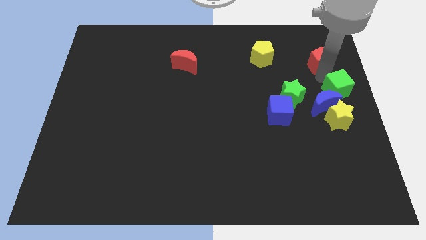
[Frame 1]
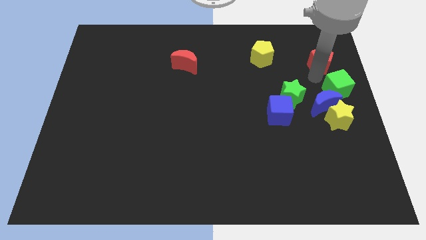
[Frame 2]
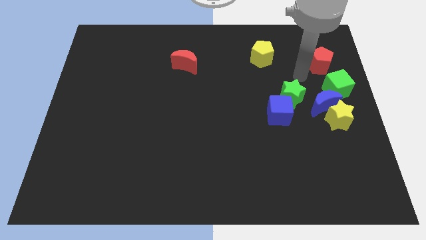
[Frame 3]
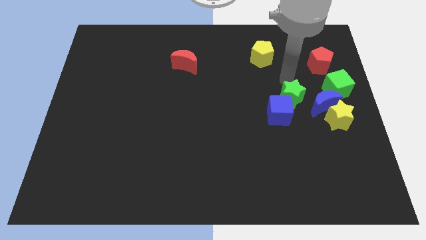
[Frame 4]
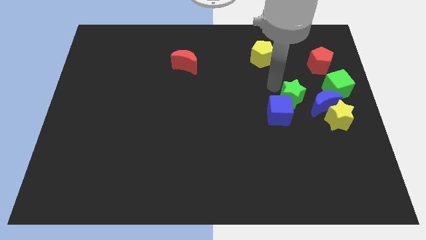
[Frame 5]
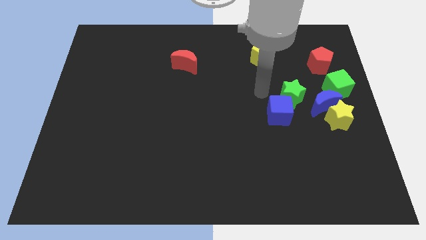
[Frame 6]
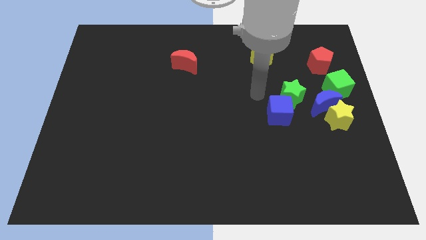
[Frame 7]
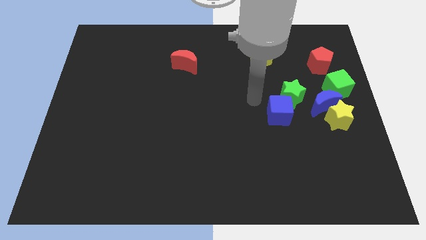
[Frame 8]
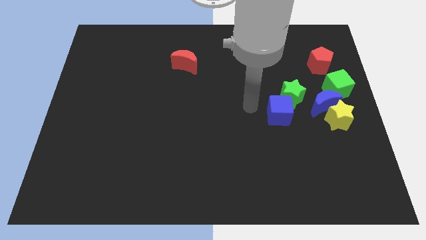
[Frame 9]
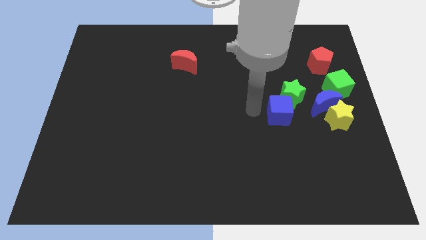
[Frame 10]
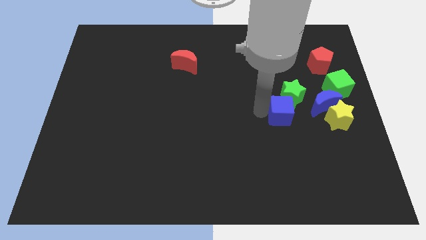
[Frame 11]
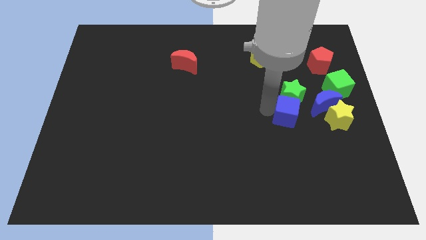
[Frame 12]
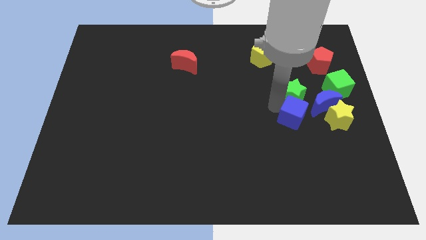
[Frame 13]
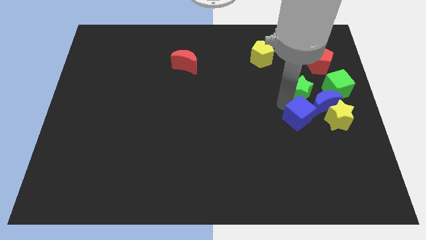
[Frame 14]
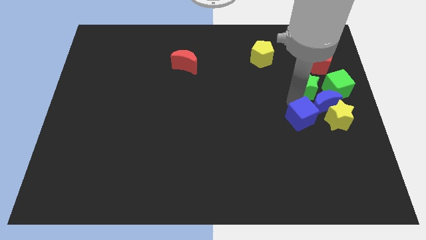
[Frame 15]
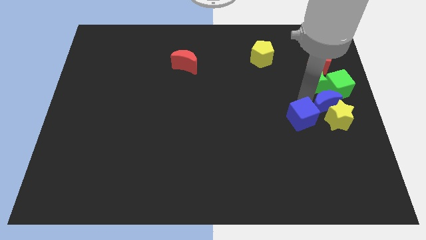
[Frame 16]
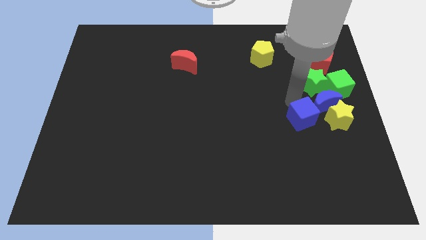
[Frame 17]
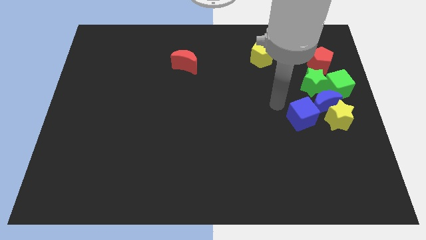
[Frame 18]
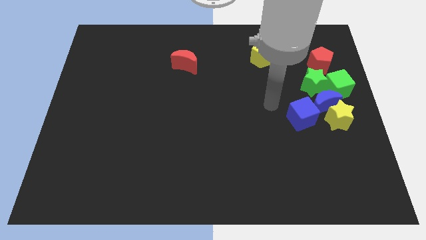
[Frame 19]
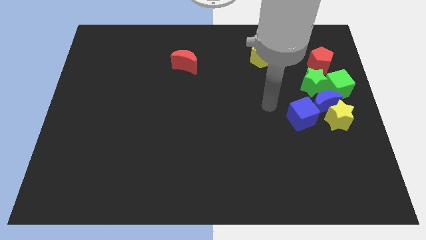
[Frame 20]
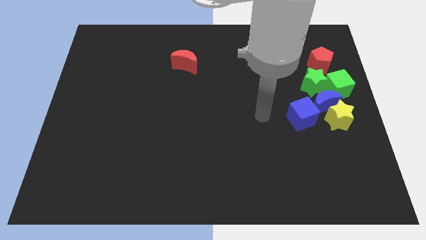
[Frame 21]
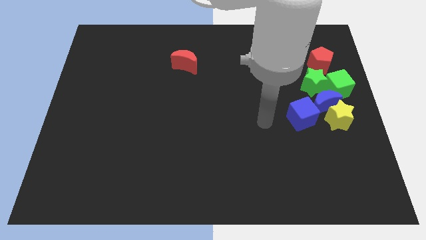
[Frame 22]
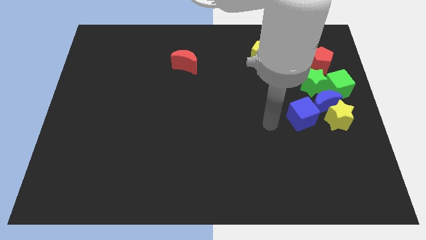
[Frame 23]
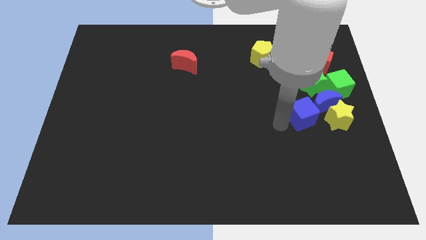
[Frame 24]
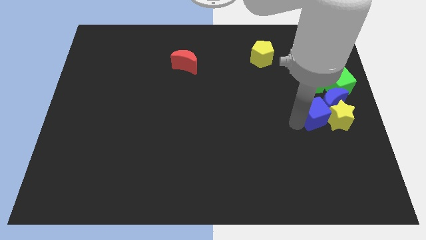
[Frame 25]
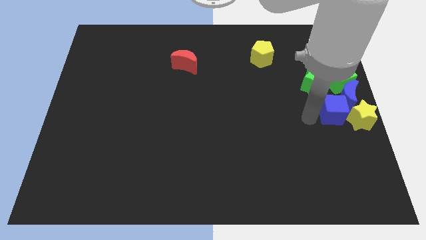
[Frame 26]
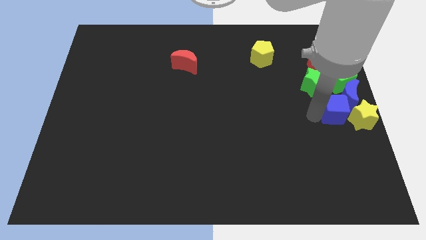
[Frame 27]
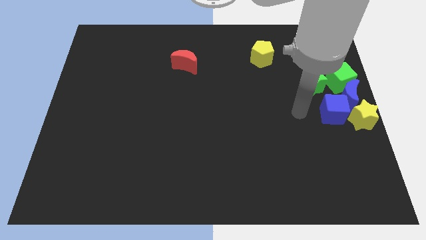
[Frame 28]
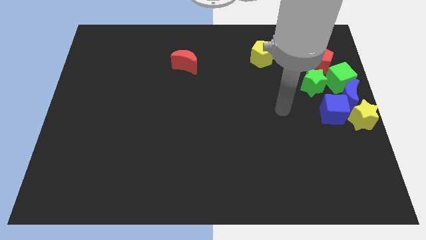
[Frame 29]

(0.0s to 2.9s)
push the yellow star green and blue blocks towards the center right side of the board

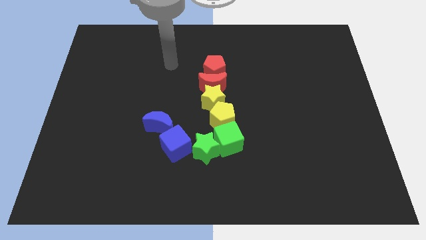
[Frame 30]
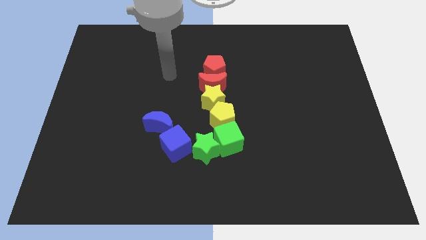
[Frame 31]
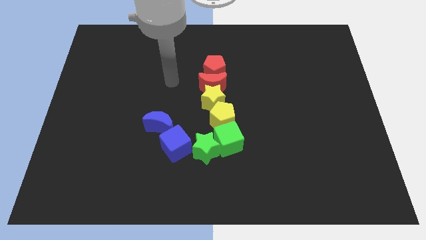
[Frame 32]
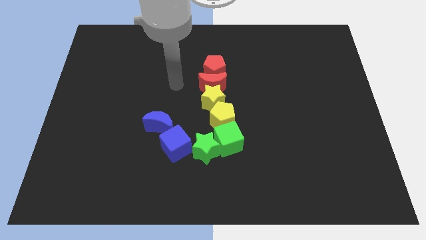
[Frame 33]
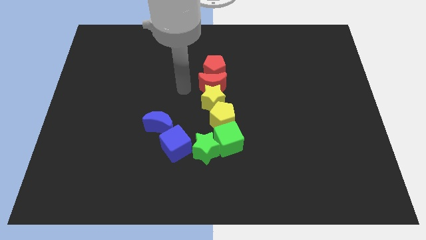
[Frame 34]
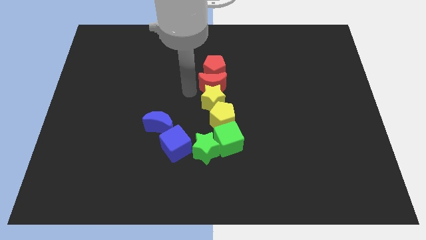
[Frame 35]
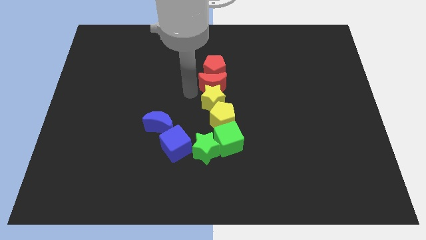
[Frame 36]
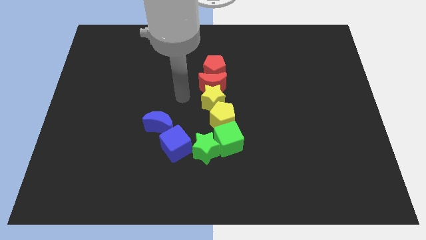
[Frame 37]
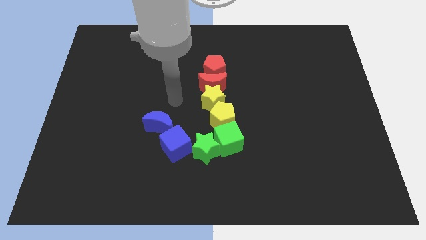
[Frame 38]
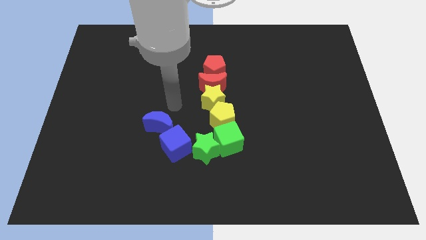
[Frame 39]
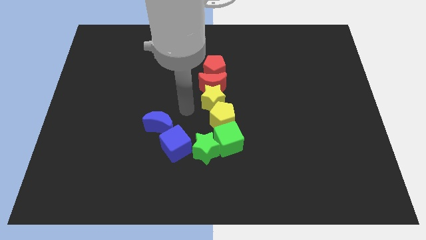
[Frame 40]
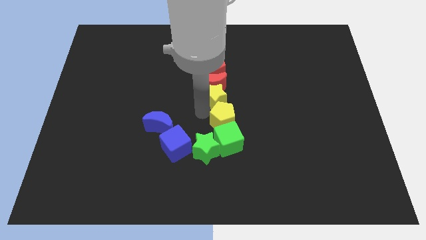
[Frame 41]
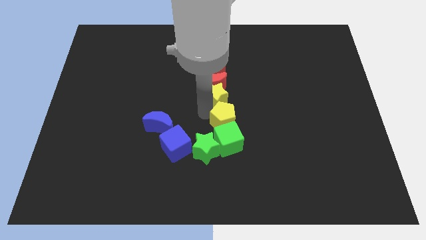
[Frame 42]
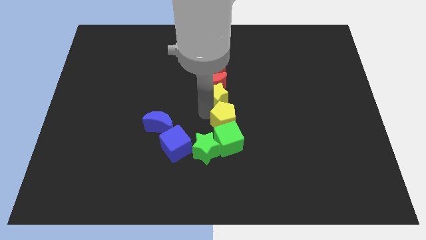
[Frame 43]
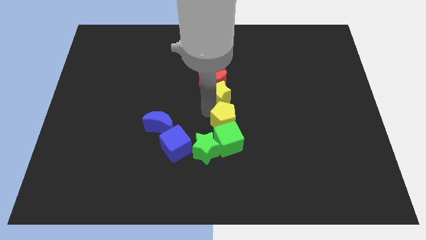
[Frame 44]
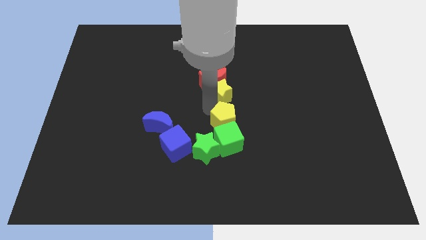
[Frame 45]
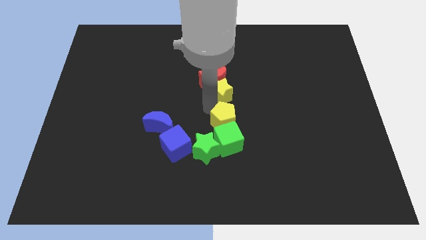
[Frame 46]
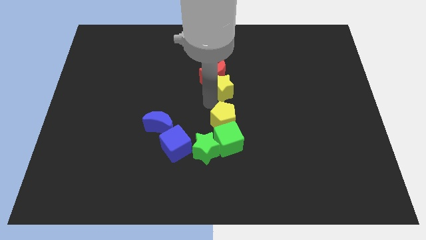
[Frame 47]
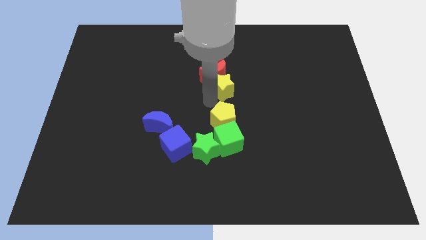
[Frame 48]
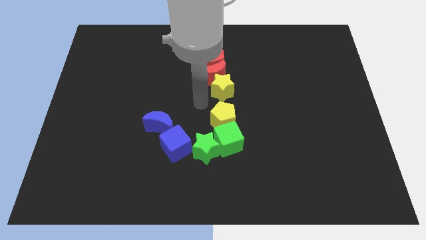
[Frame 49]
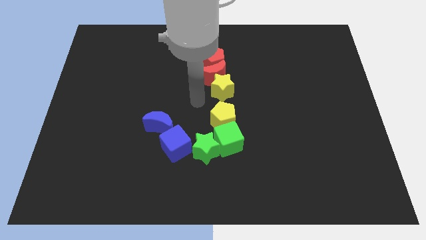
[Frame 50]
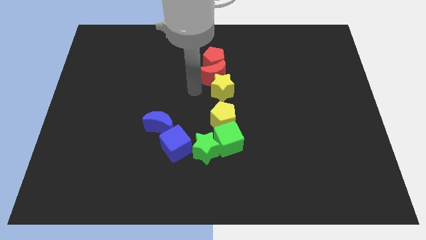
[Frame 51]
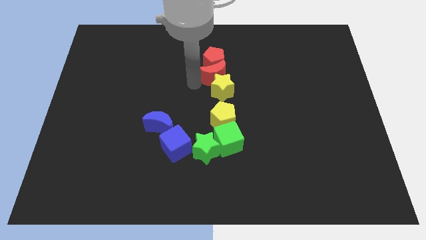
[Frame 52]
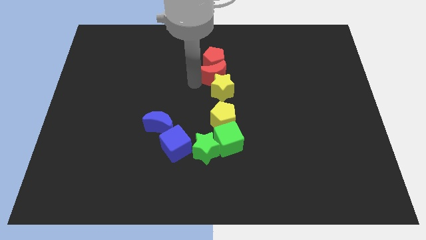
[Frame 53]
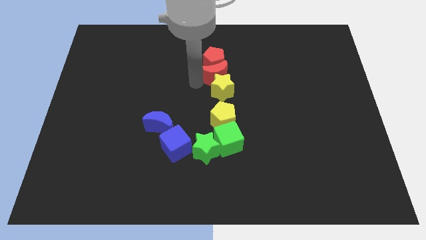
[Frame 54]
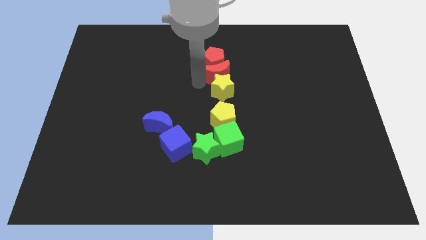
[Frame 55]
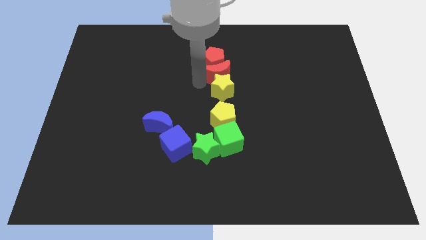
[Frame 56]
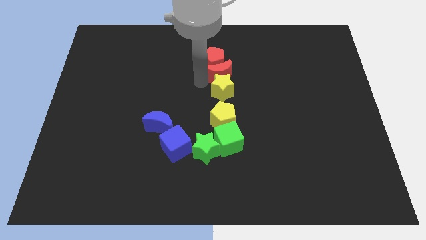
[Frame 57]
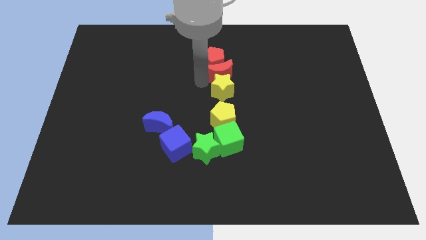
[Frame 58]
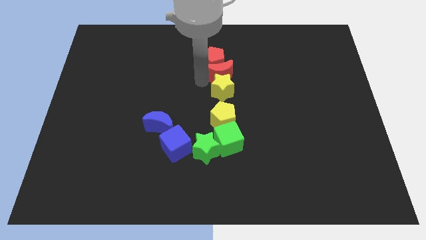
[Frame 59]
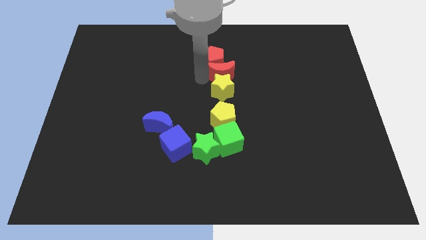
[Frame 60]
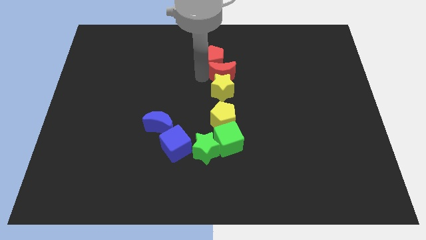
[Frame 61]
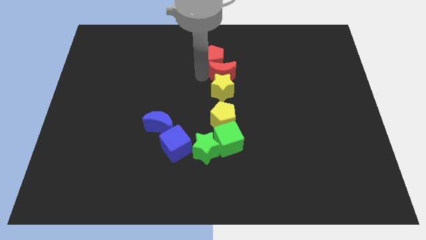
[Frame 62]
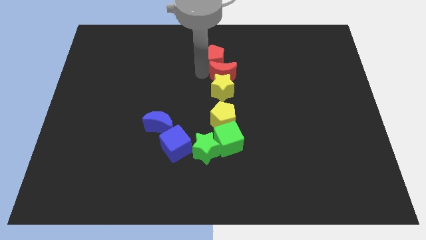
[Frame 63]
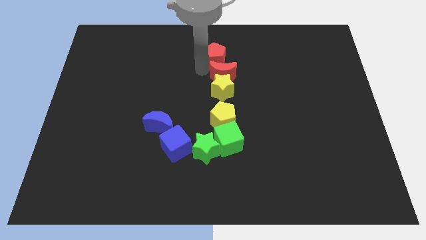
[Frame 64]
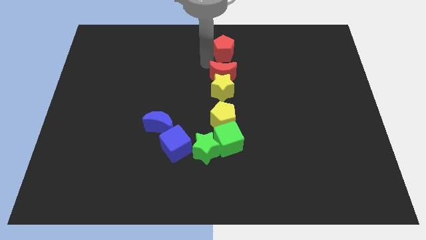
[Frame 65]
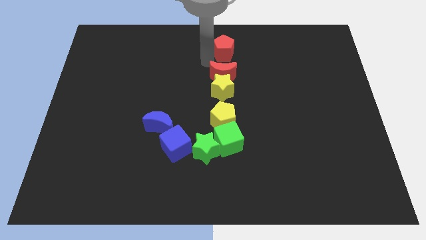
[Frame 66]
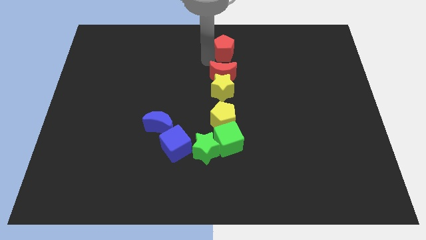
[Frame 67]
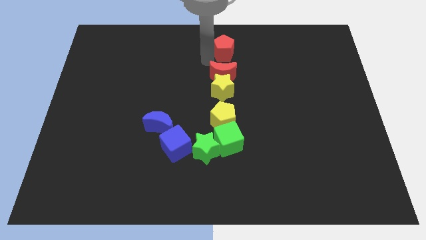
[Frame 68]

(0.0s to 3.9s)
move the two red blocks and yellow star slightly up

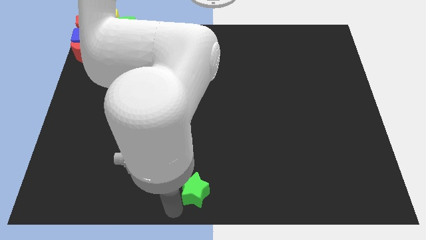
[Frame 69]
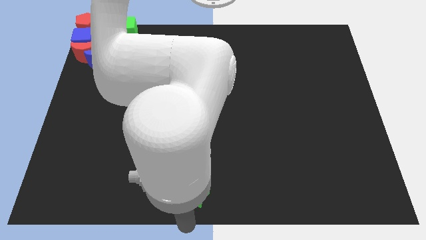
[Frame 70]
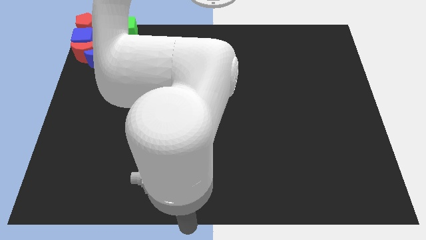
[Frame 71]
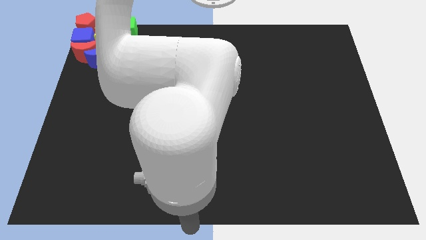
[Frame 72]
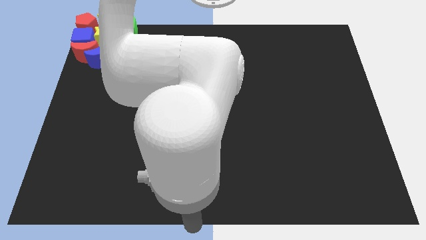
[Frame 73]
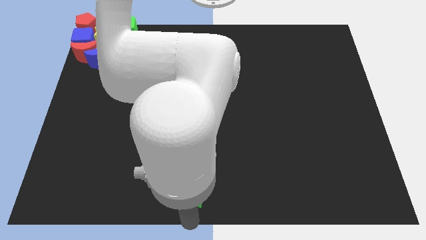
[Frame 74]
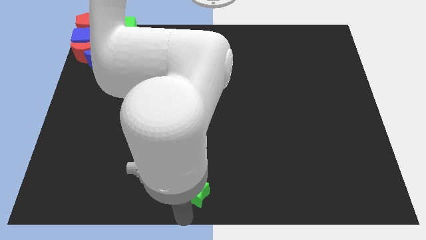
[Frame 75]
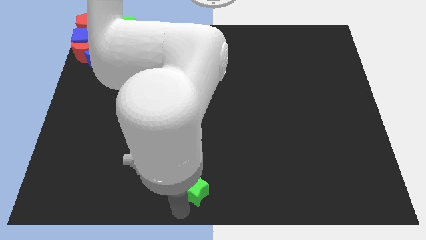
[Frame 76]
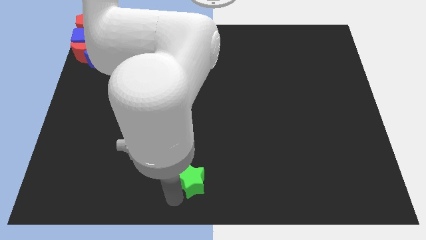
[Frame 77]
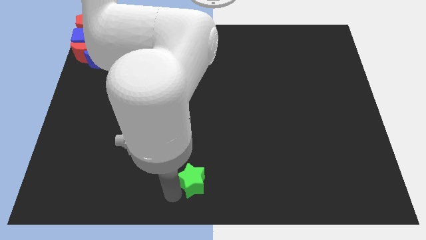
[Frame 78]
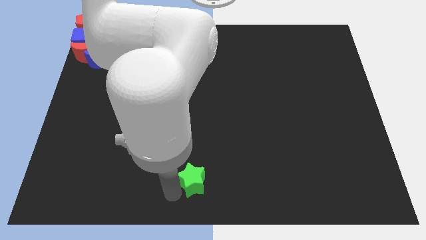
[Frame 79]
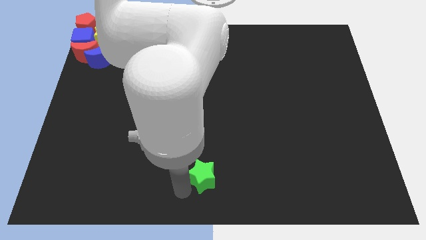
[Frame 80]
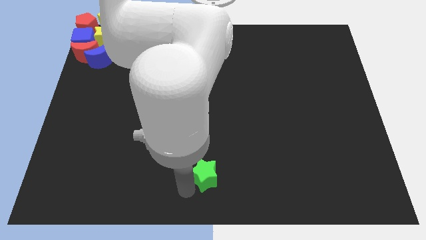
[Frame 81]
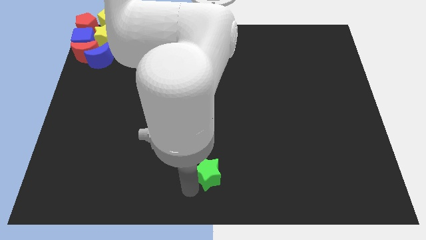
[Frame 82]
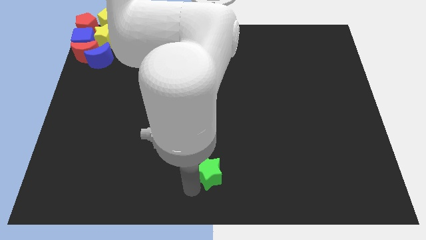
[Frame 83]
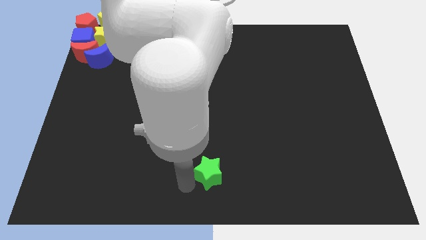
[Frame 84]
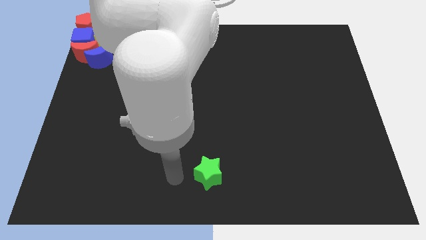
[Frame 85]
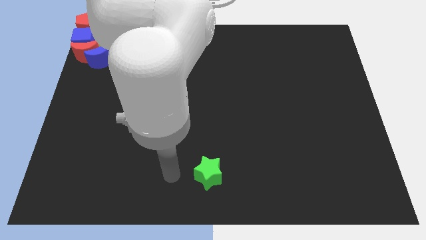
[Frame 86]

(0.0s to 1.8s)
slightly move the green star up

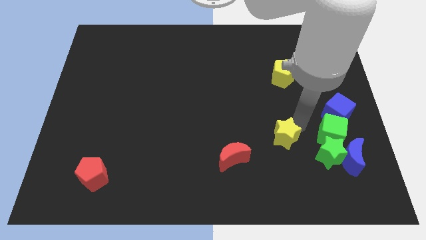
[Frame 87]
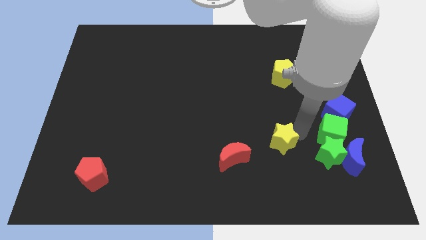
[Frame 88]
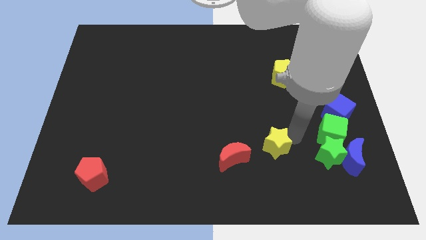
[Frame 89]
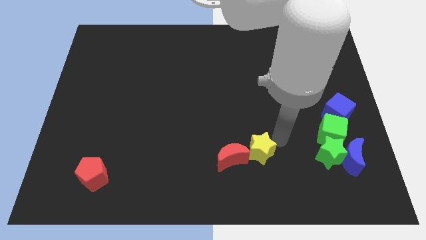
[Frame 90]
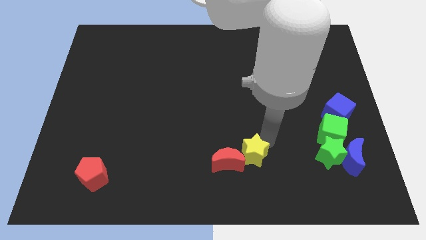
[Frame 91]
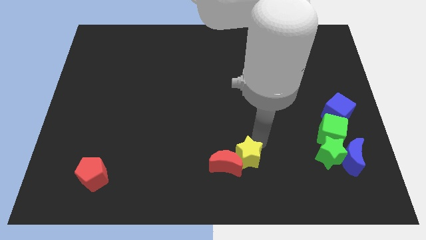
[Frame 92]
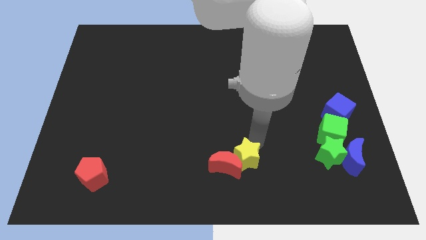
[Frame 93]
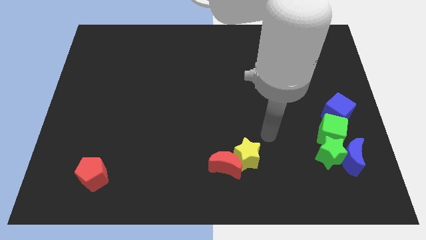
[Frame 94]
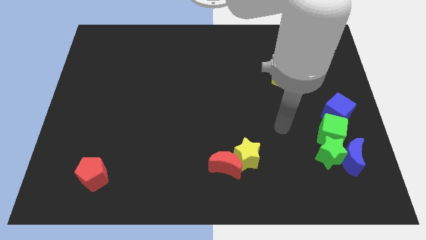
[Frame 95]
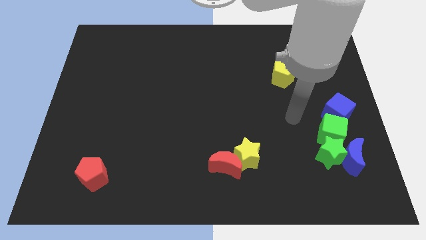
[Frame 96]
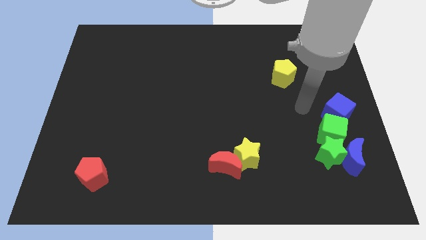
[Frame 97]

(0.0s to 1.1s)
push the yellow star into the red moon
